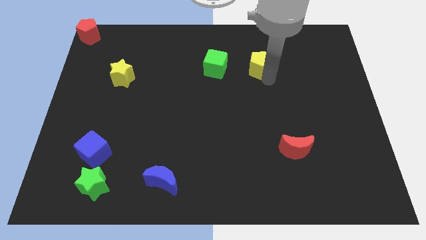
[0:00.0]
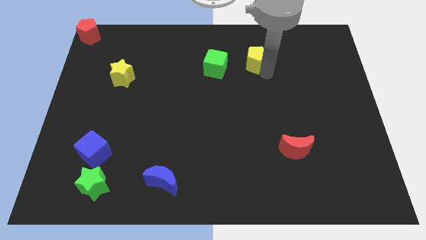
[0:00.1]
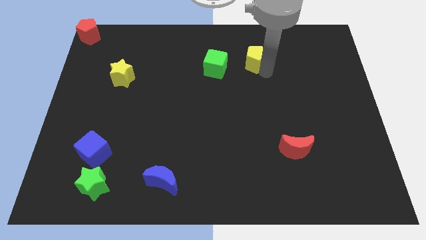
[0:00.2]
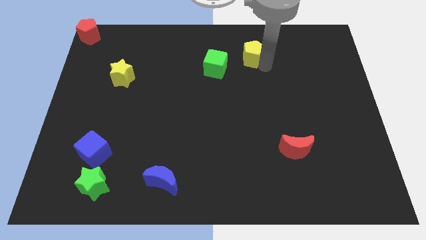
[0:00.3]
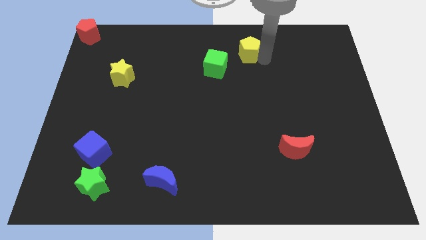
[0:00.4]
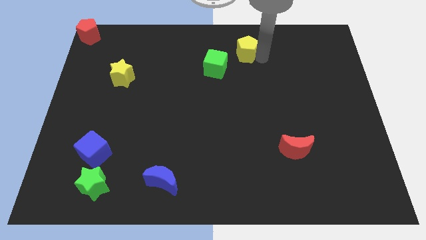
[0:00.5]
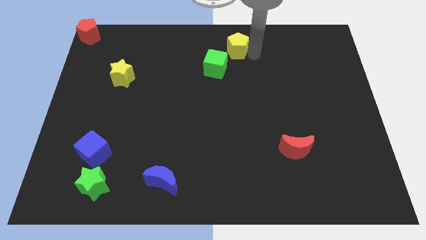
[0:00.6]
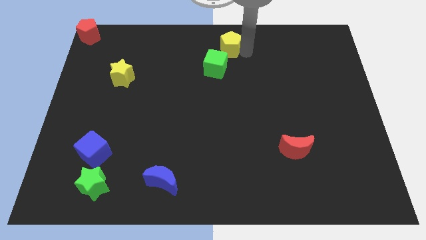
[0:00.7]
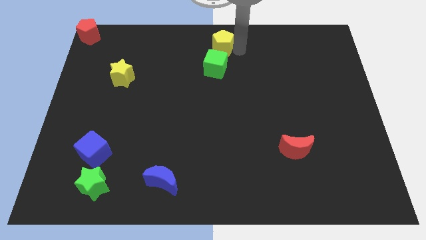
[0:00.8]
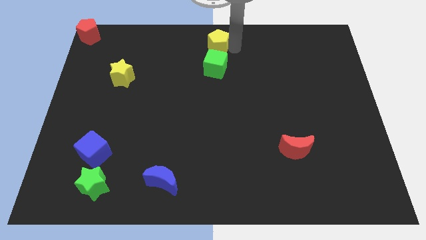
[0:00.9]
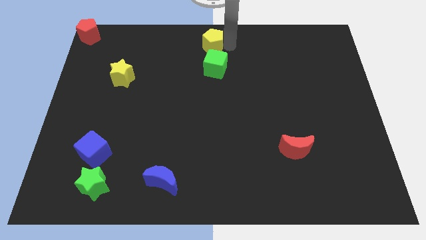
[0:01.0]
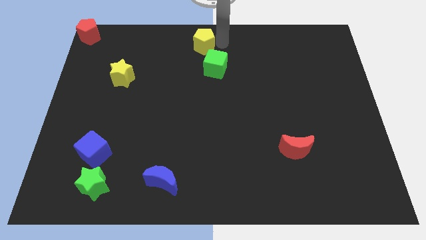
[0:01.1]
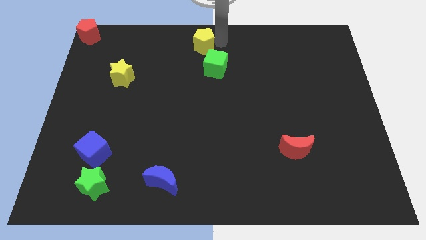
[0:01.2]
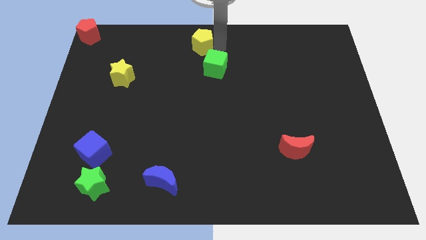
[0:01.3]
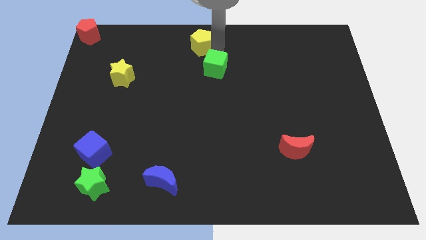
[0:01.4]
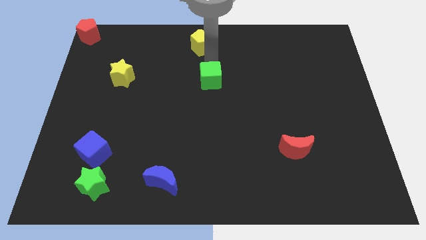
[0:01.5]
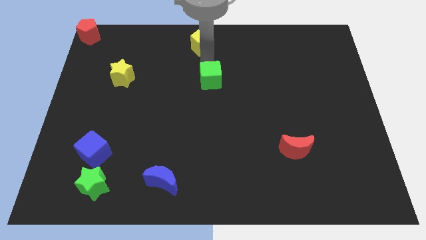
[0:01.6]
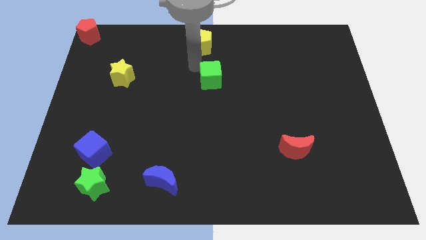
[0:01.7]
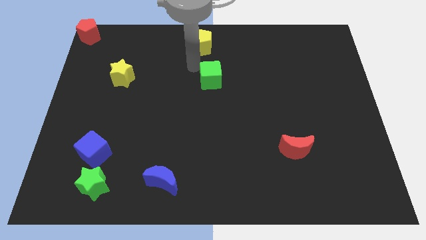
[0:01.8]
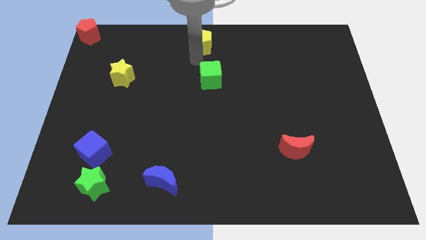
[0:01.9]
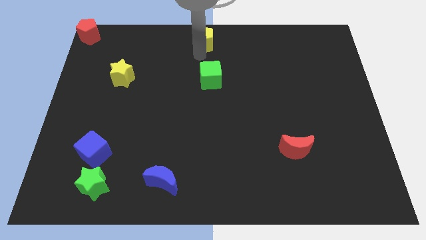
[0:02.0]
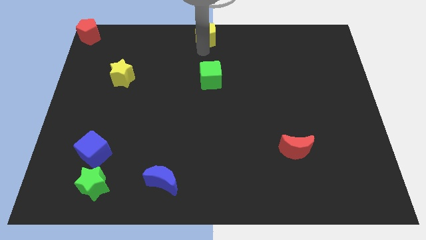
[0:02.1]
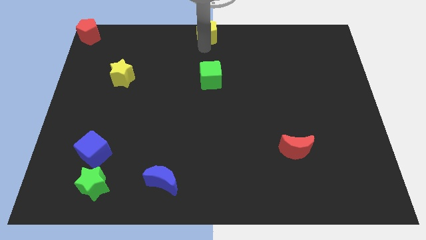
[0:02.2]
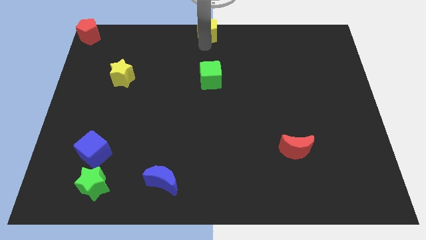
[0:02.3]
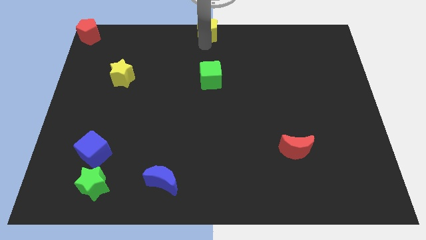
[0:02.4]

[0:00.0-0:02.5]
place the yellow pentagon at the top center of the board

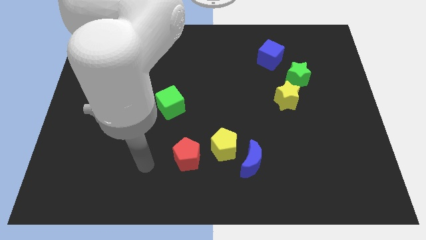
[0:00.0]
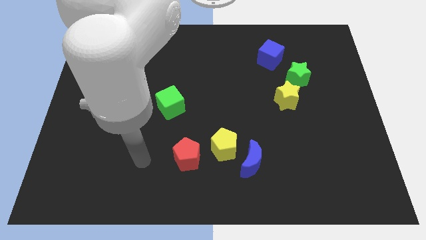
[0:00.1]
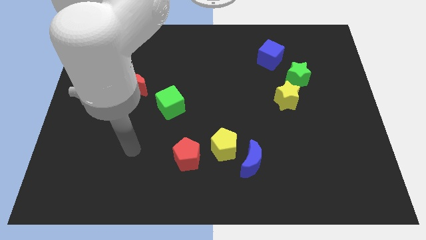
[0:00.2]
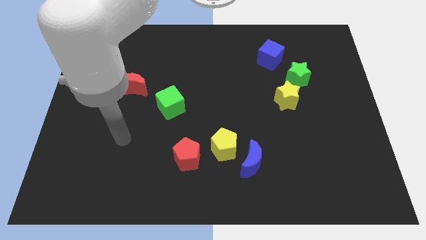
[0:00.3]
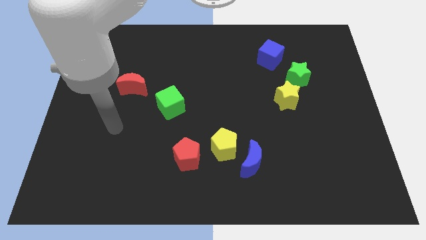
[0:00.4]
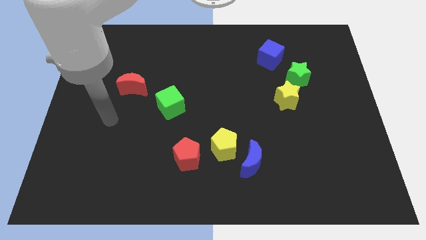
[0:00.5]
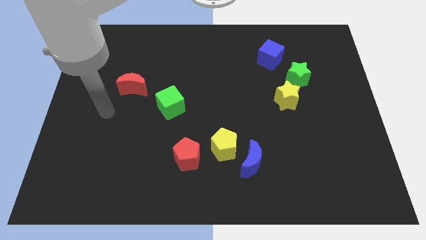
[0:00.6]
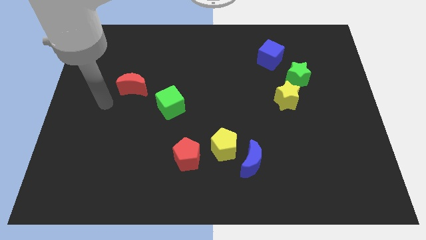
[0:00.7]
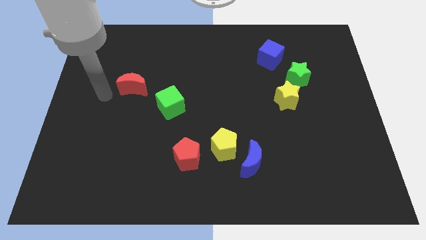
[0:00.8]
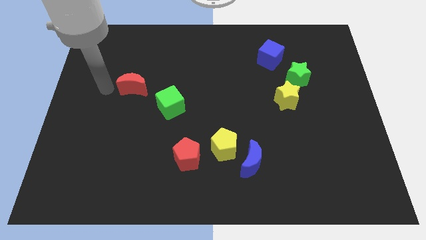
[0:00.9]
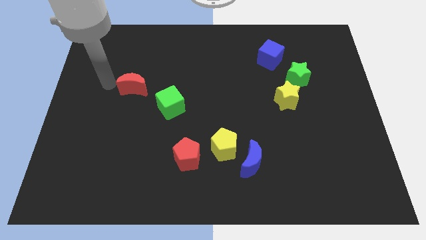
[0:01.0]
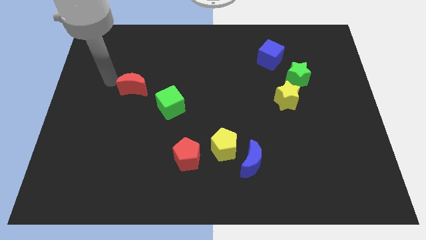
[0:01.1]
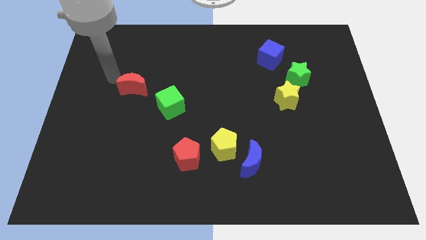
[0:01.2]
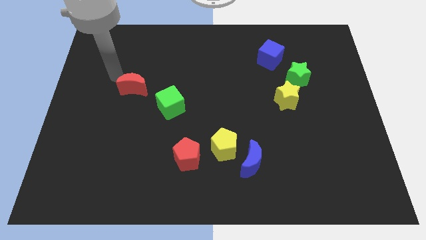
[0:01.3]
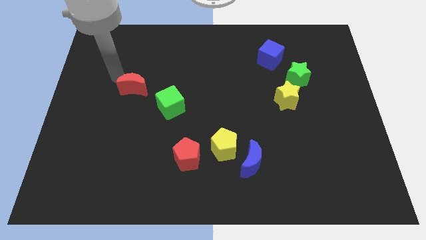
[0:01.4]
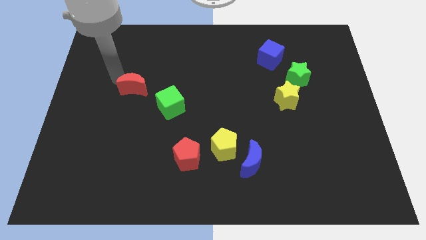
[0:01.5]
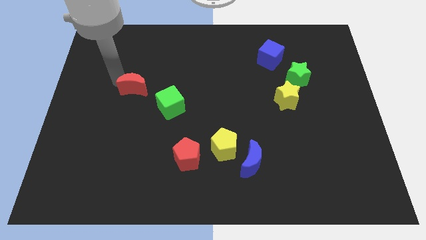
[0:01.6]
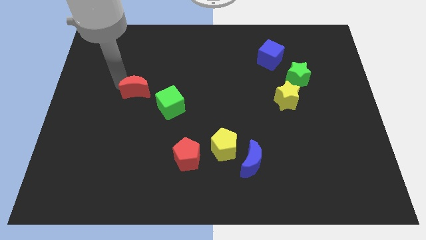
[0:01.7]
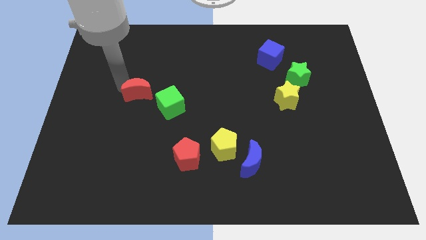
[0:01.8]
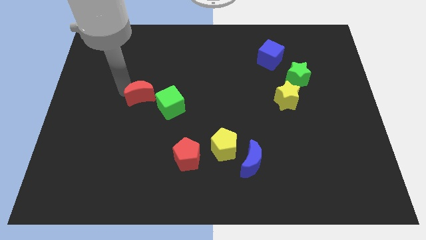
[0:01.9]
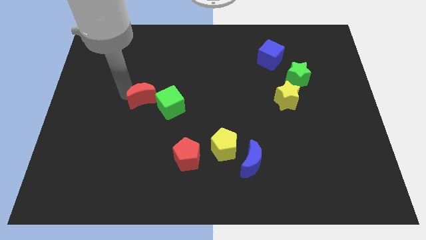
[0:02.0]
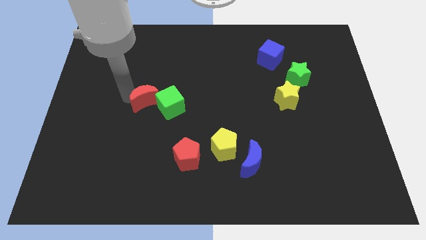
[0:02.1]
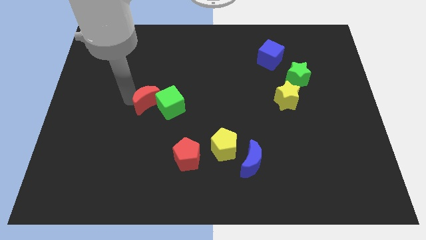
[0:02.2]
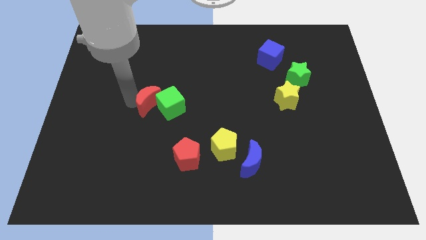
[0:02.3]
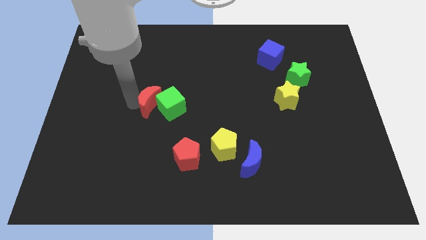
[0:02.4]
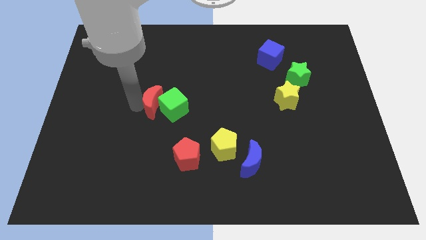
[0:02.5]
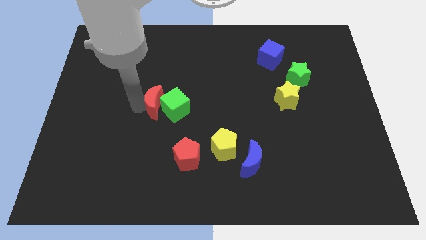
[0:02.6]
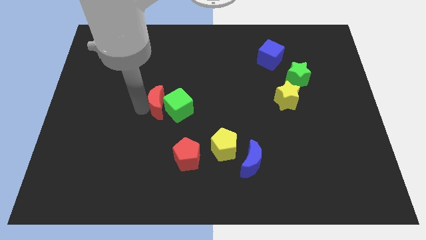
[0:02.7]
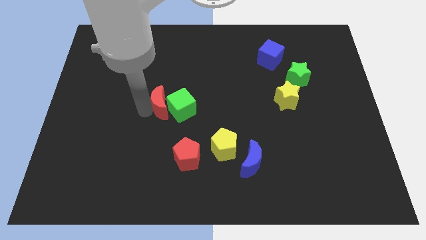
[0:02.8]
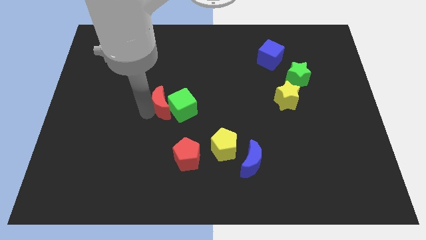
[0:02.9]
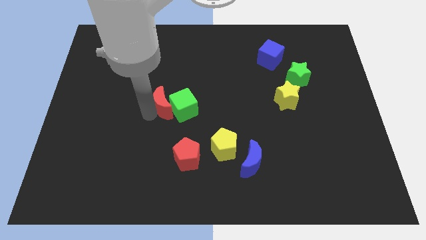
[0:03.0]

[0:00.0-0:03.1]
push the red crescent into green cube

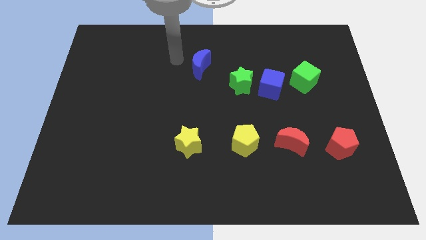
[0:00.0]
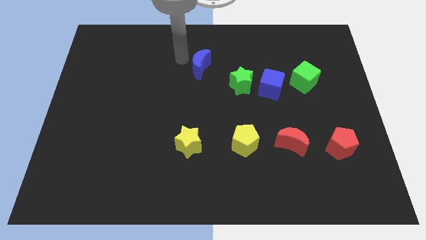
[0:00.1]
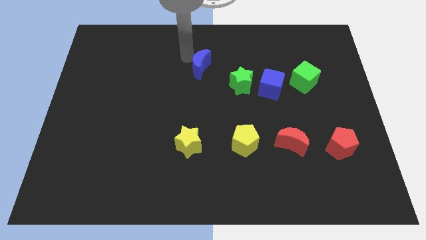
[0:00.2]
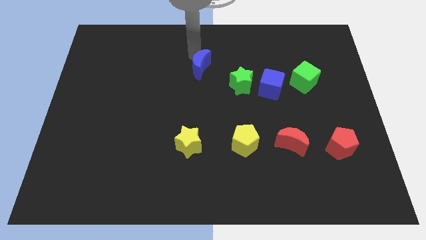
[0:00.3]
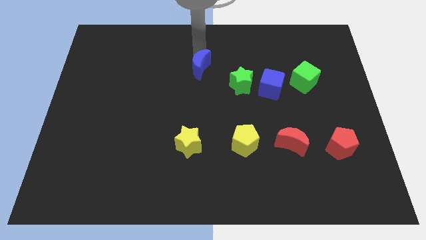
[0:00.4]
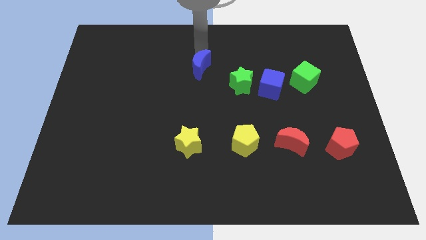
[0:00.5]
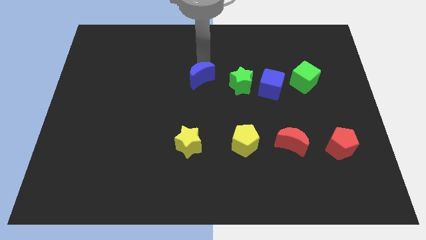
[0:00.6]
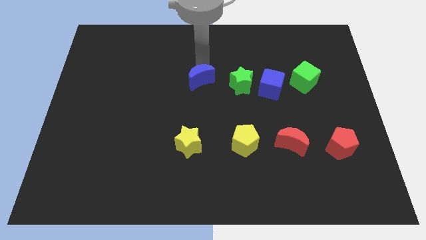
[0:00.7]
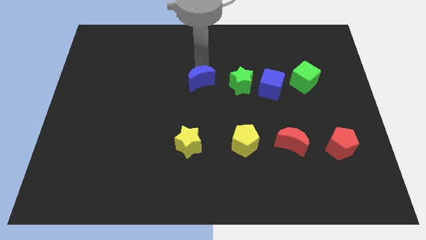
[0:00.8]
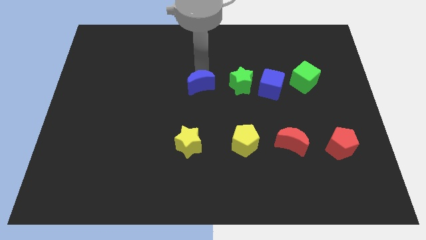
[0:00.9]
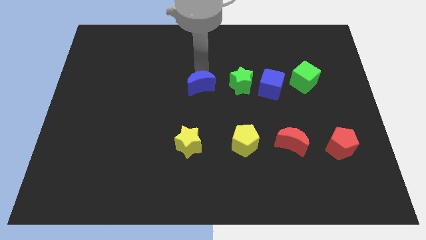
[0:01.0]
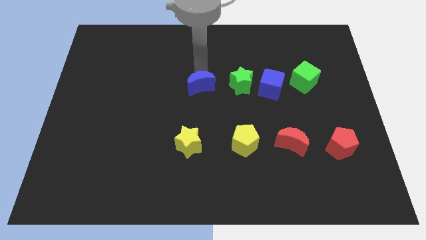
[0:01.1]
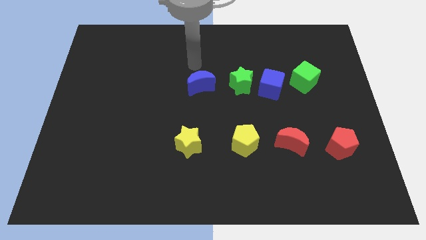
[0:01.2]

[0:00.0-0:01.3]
push the blue crescent towards the center of the board

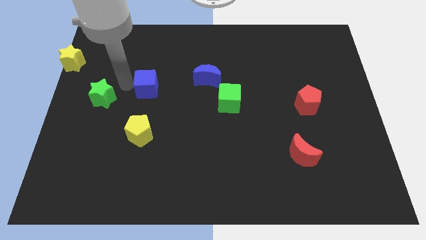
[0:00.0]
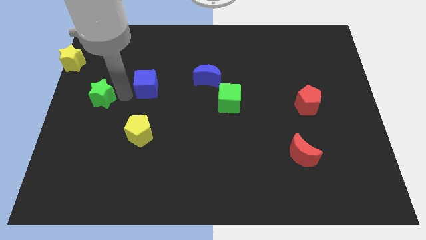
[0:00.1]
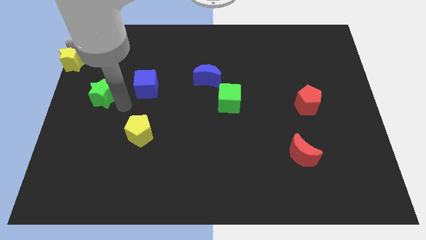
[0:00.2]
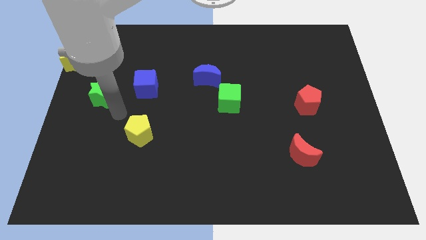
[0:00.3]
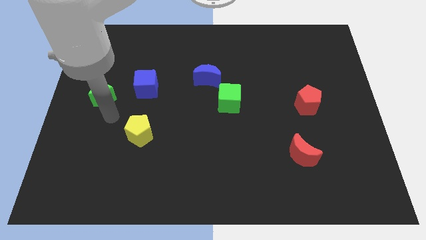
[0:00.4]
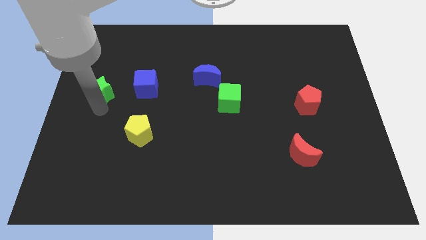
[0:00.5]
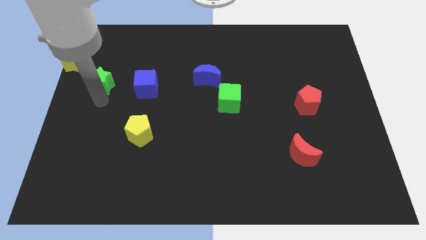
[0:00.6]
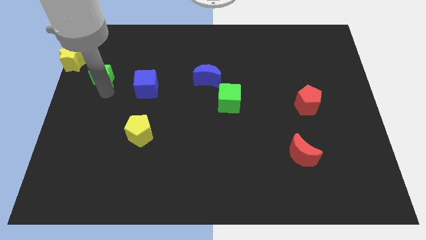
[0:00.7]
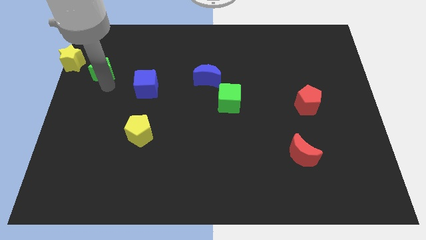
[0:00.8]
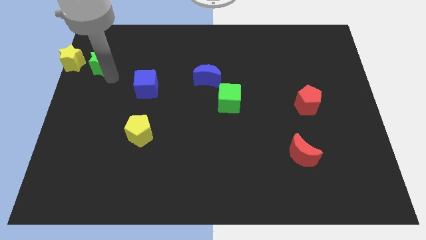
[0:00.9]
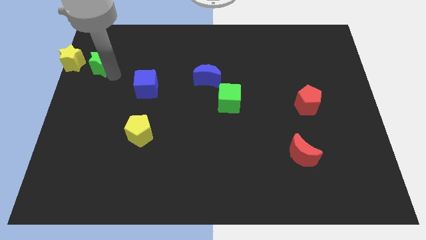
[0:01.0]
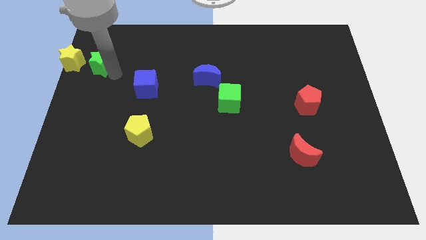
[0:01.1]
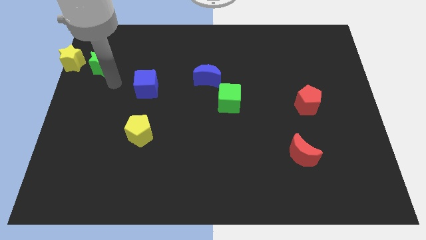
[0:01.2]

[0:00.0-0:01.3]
move the green star to the right of the yellow star

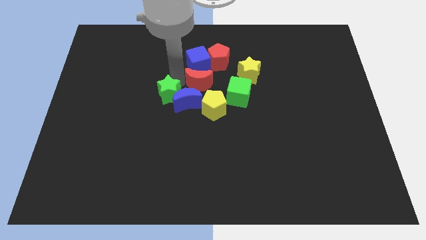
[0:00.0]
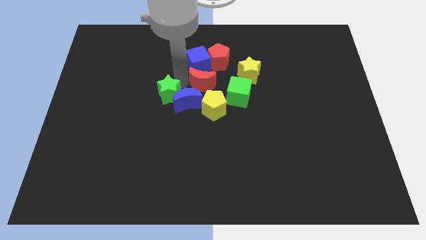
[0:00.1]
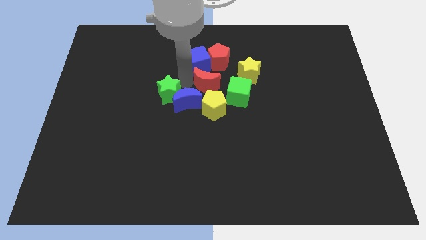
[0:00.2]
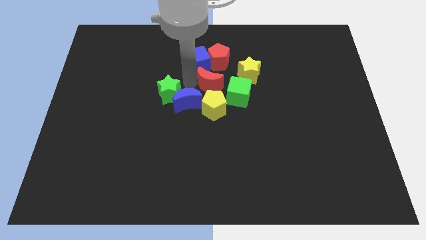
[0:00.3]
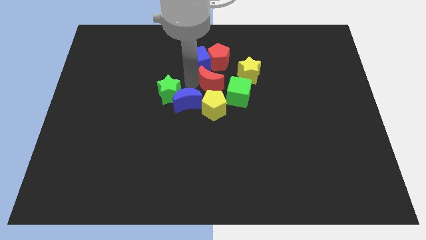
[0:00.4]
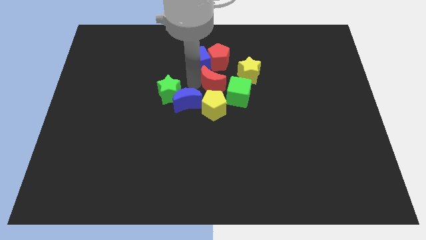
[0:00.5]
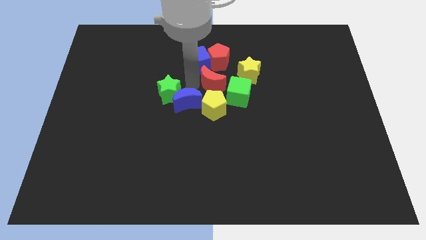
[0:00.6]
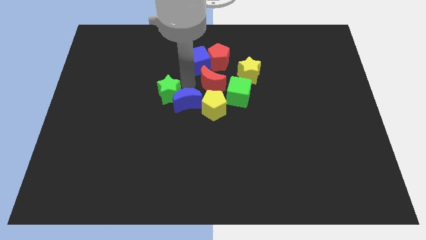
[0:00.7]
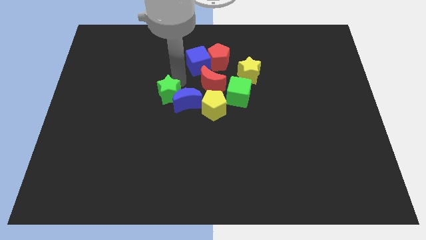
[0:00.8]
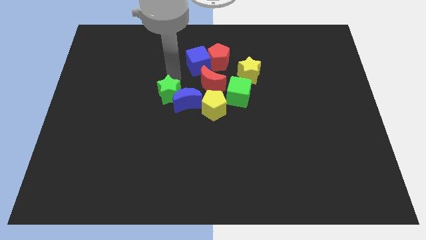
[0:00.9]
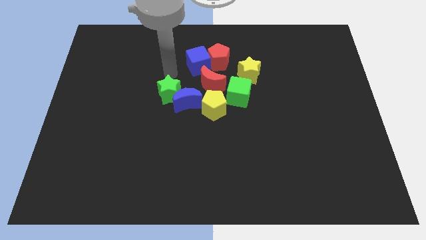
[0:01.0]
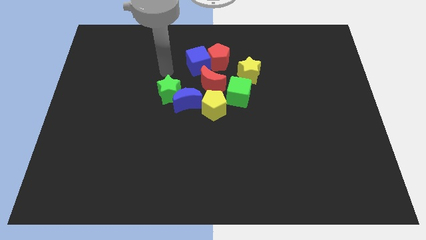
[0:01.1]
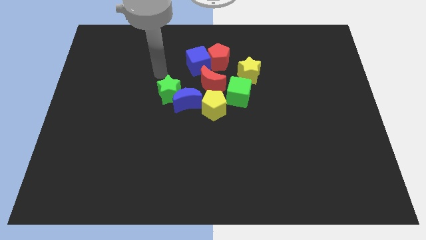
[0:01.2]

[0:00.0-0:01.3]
push the red moon into the green cube
